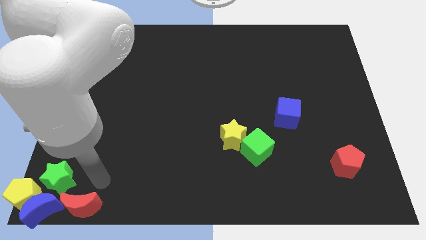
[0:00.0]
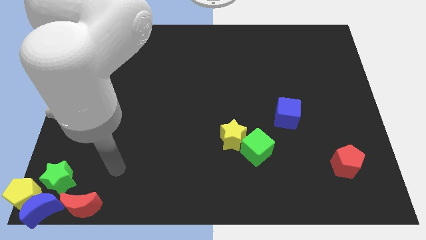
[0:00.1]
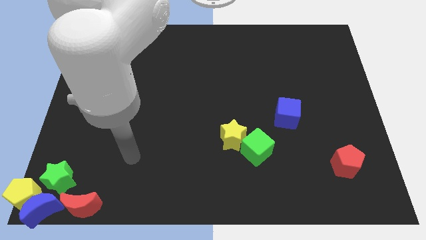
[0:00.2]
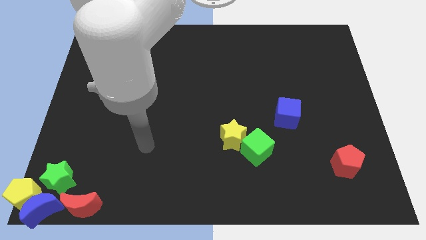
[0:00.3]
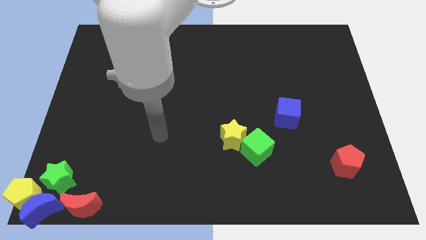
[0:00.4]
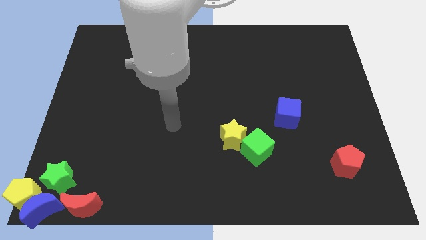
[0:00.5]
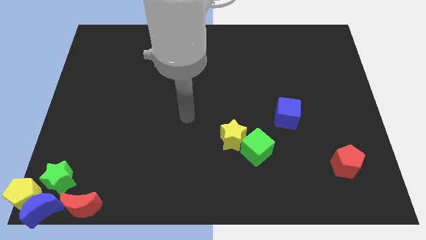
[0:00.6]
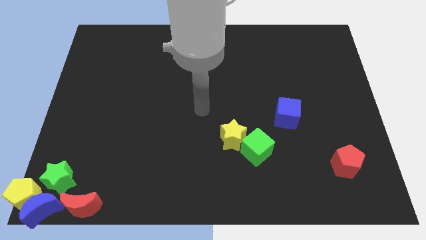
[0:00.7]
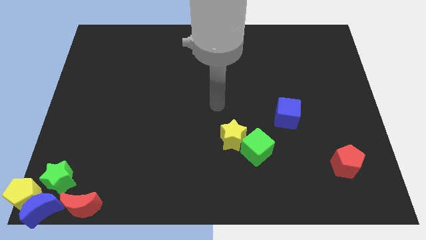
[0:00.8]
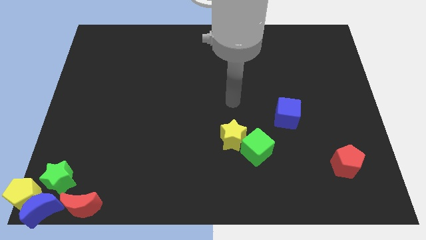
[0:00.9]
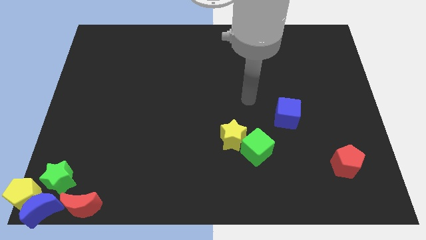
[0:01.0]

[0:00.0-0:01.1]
move your arm away from the red moon

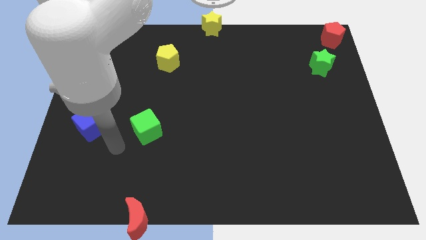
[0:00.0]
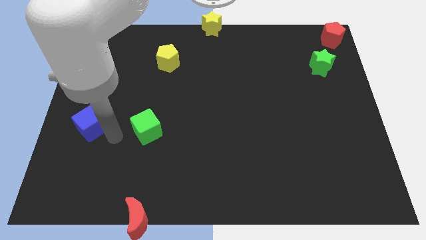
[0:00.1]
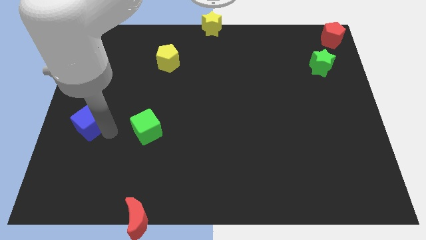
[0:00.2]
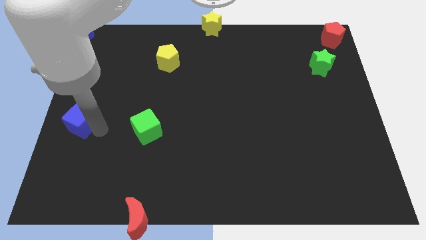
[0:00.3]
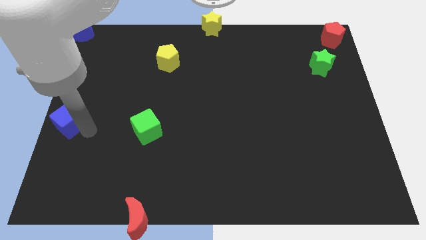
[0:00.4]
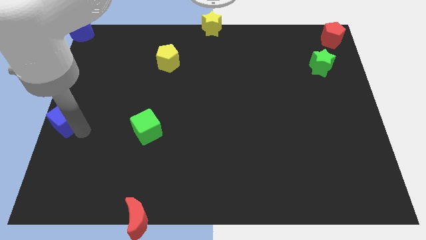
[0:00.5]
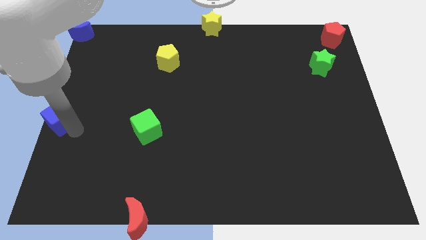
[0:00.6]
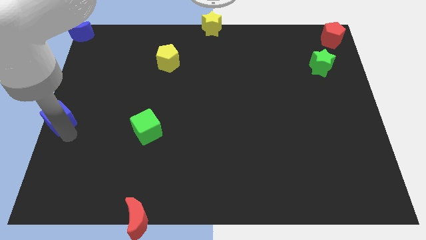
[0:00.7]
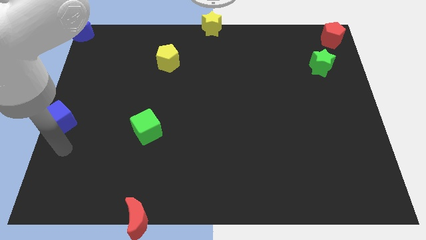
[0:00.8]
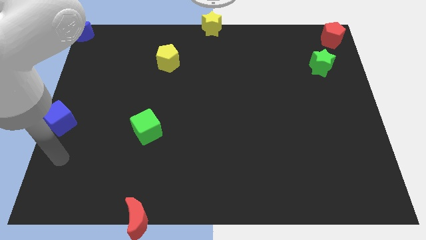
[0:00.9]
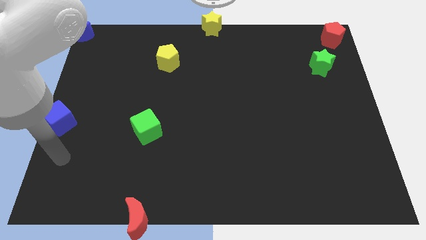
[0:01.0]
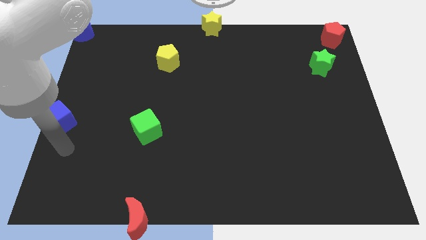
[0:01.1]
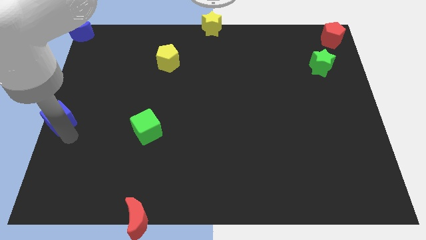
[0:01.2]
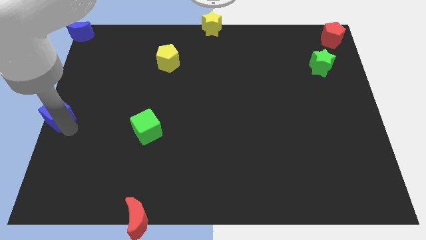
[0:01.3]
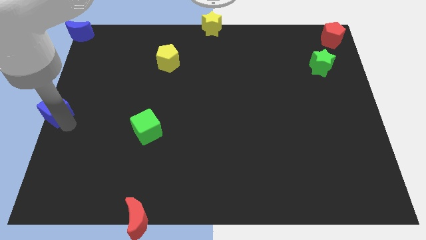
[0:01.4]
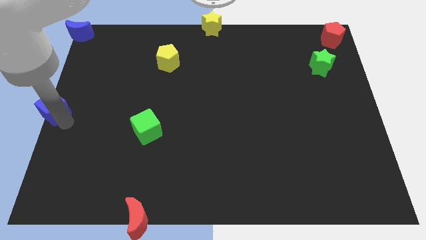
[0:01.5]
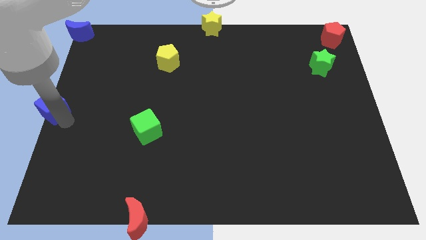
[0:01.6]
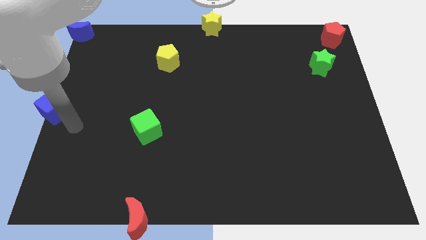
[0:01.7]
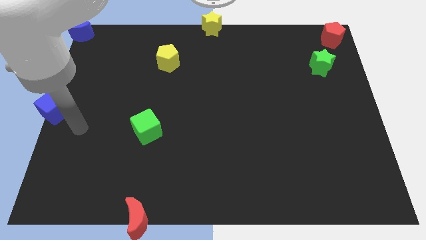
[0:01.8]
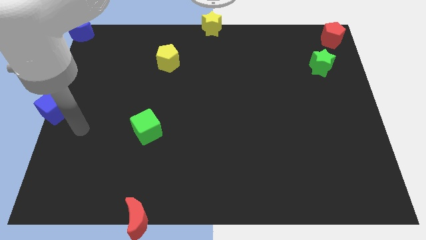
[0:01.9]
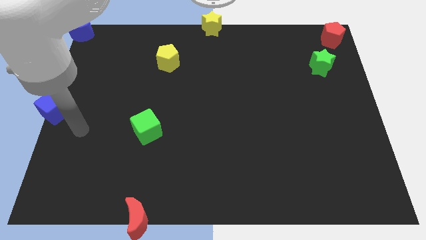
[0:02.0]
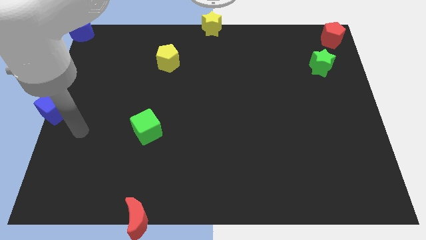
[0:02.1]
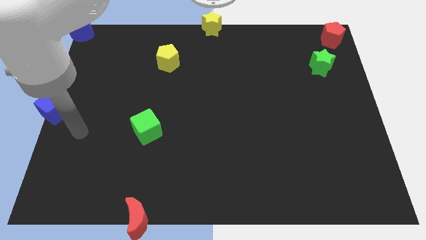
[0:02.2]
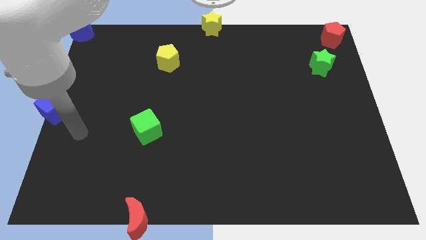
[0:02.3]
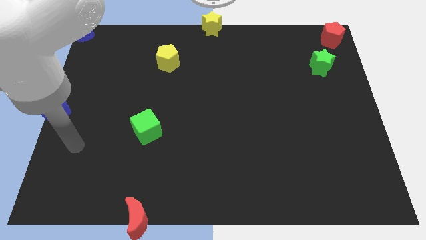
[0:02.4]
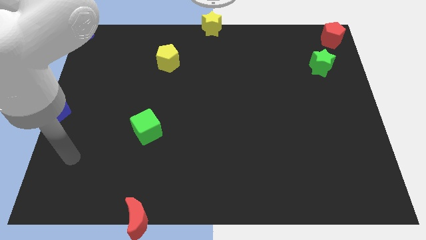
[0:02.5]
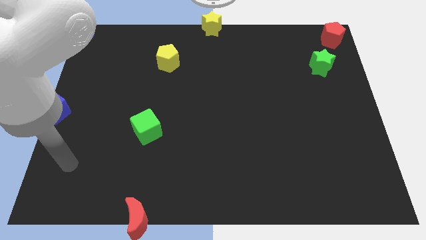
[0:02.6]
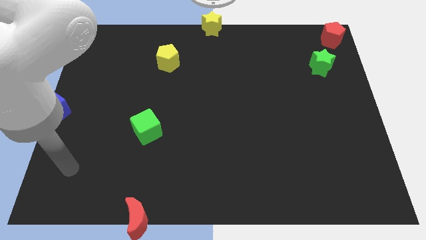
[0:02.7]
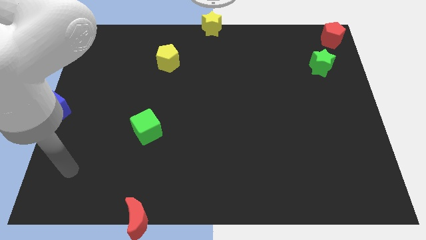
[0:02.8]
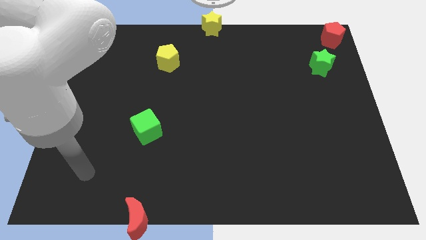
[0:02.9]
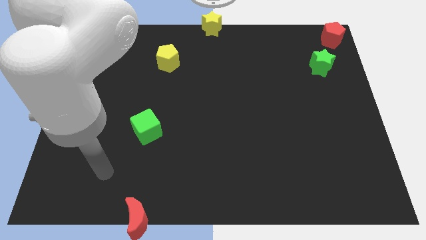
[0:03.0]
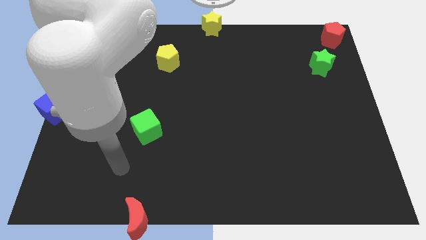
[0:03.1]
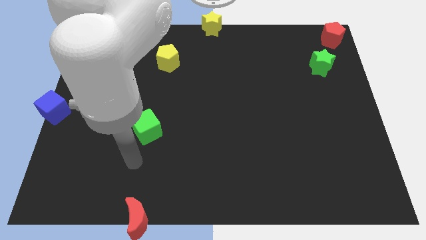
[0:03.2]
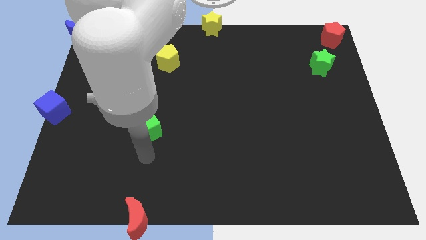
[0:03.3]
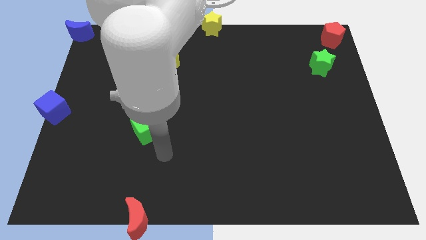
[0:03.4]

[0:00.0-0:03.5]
slide the blue cube to the center left of the board

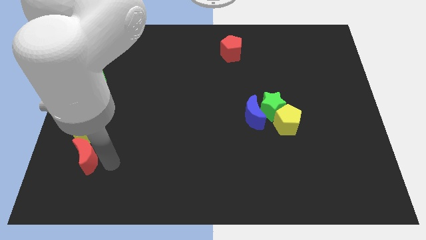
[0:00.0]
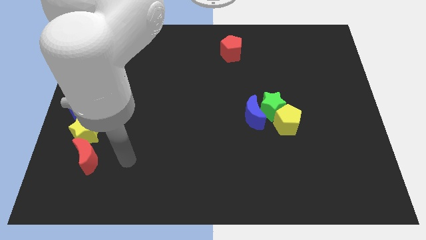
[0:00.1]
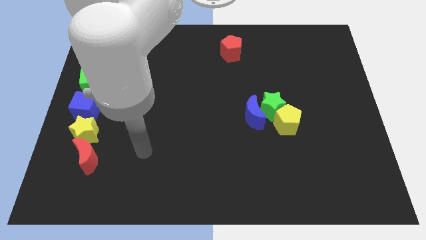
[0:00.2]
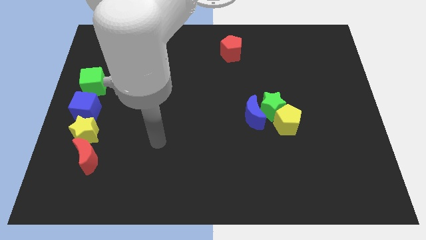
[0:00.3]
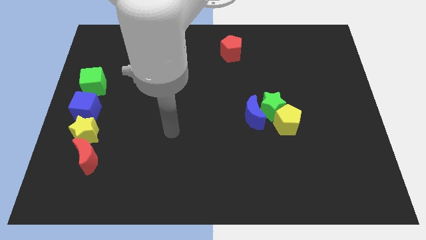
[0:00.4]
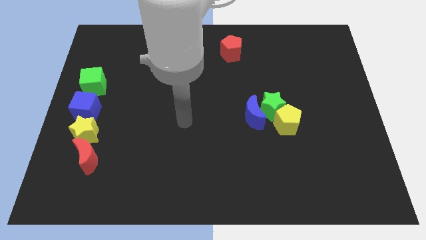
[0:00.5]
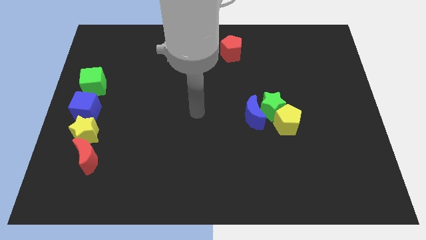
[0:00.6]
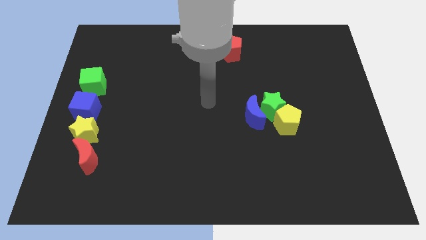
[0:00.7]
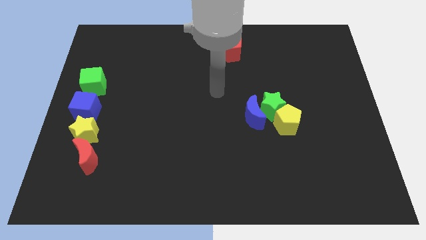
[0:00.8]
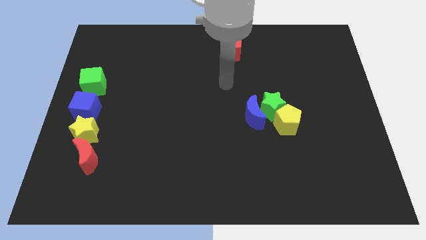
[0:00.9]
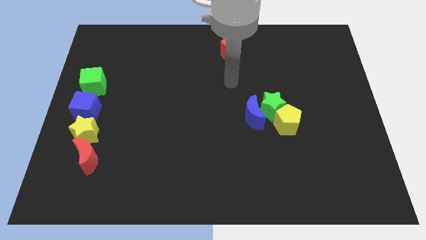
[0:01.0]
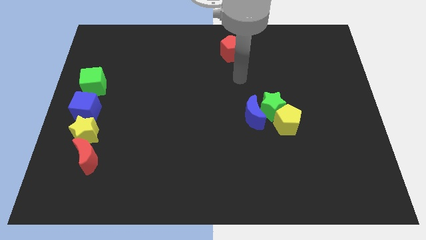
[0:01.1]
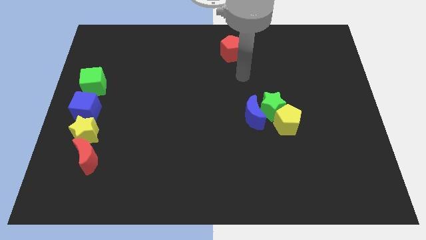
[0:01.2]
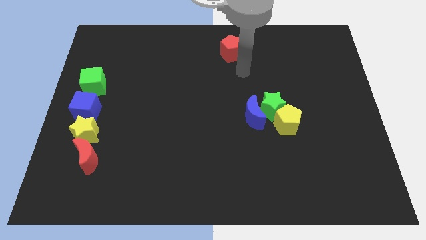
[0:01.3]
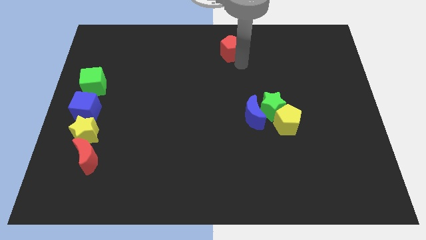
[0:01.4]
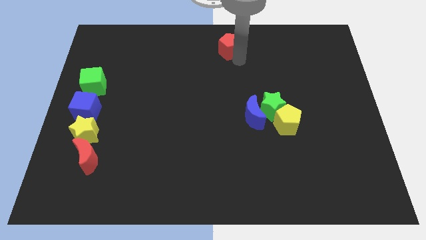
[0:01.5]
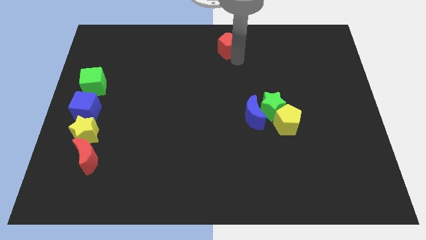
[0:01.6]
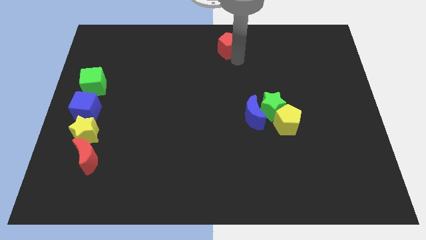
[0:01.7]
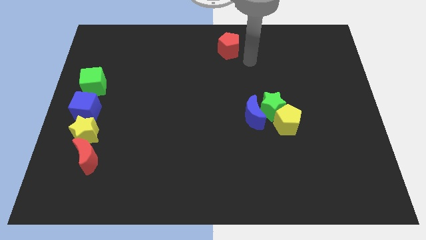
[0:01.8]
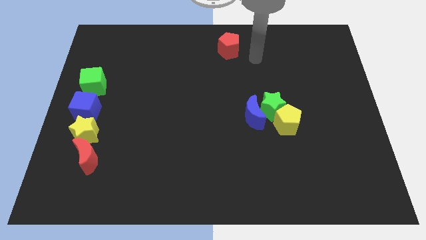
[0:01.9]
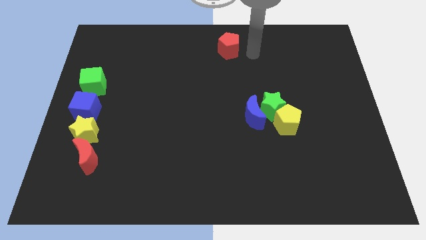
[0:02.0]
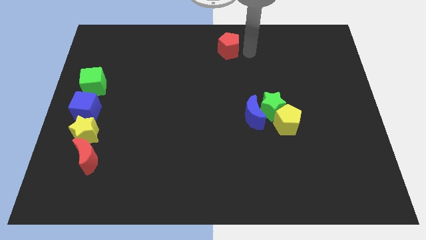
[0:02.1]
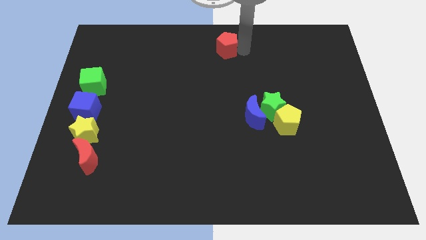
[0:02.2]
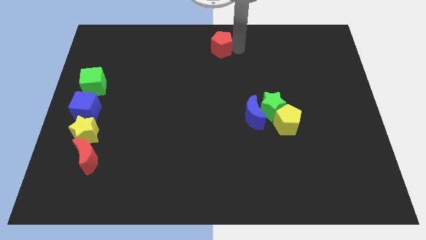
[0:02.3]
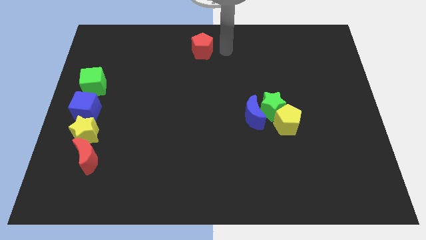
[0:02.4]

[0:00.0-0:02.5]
push the red pentagon slightly towards the top center of the board

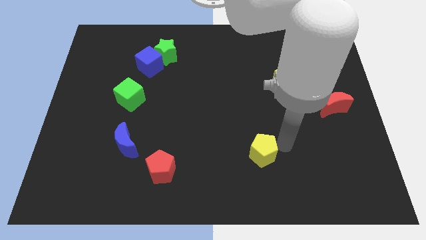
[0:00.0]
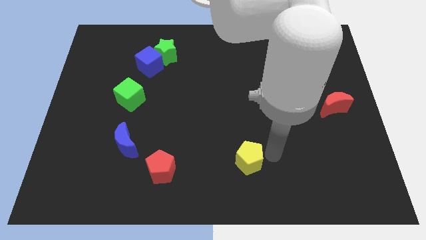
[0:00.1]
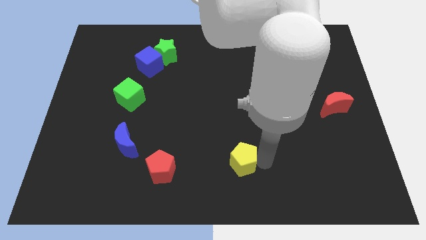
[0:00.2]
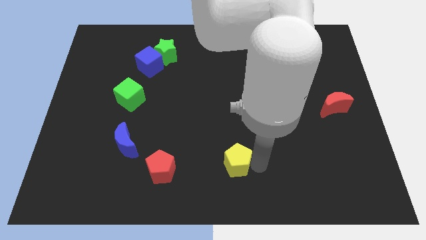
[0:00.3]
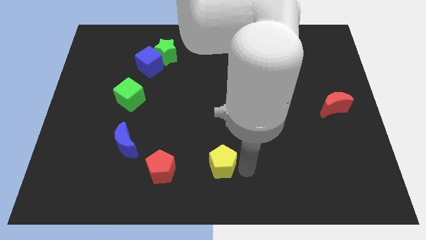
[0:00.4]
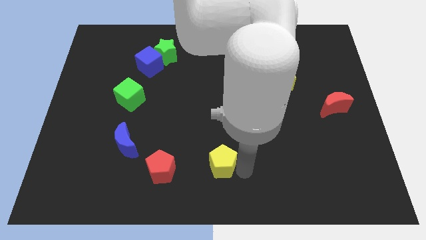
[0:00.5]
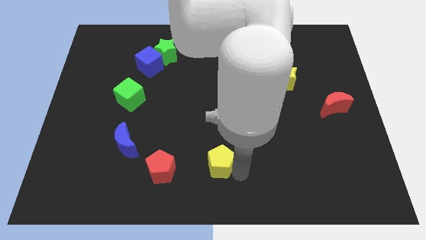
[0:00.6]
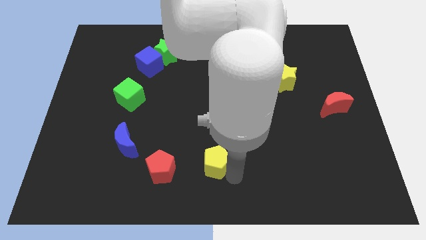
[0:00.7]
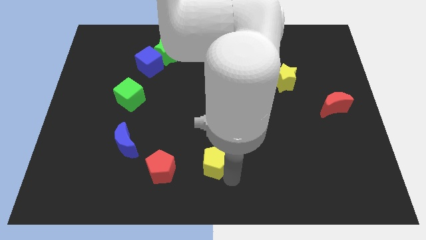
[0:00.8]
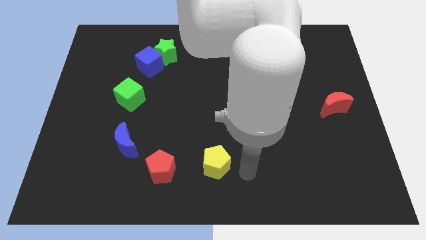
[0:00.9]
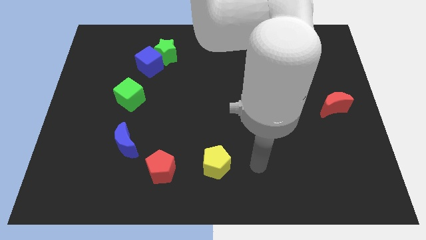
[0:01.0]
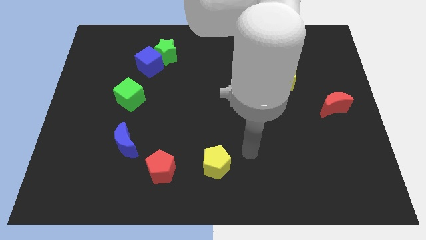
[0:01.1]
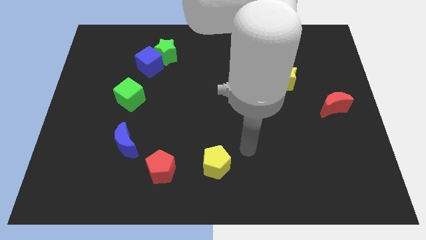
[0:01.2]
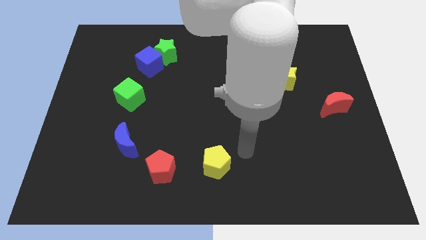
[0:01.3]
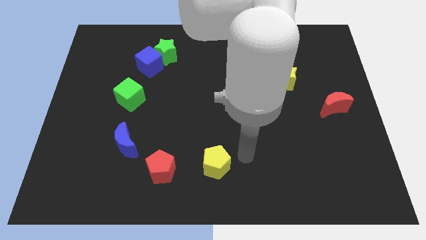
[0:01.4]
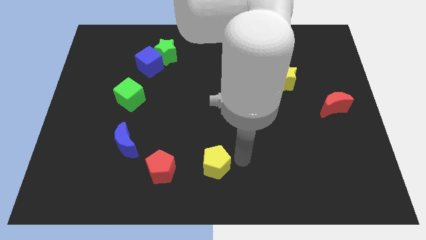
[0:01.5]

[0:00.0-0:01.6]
place the yellow pentagon horizontally right to the red pentagon

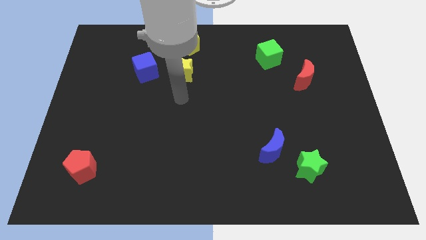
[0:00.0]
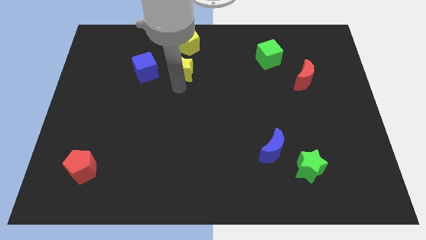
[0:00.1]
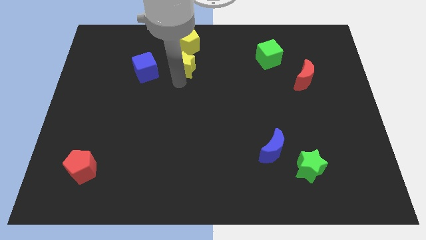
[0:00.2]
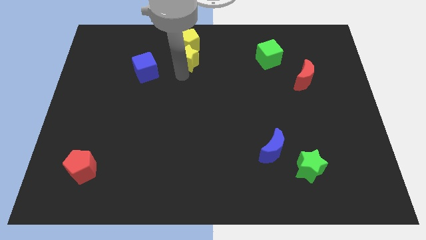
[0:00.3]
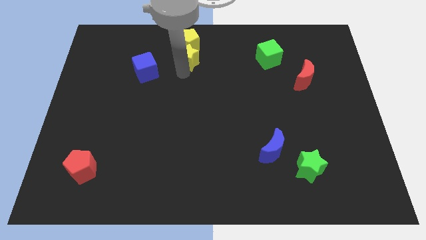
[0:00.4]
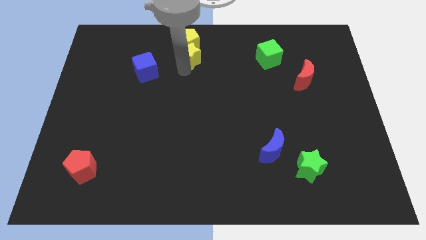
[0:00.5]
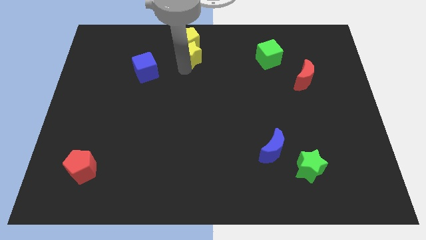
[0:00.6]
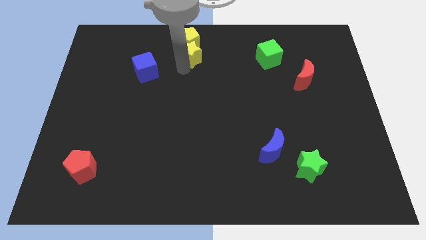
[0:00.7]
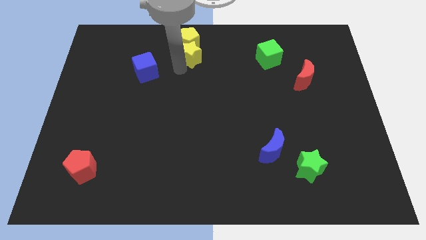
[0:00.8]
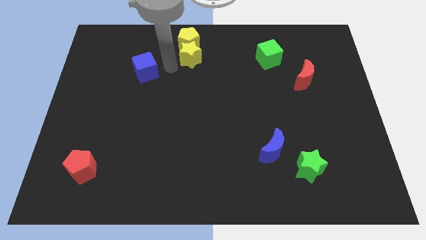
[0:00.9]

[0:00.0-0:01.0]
push the yellow star into the yellow pentagon
